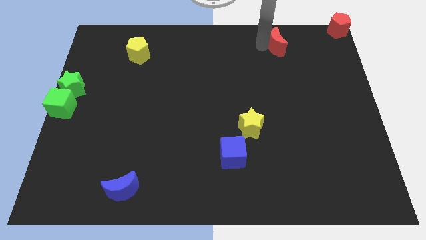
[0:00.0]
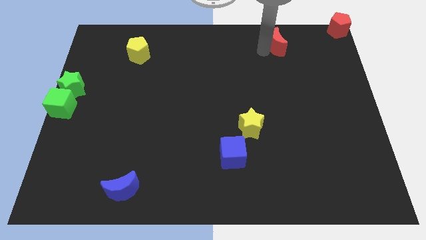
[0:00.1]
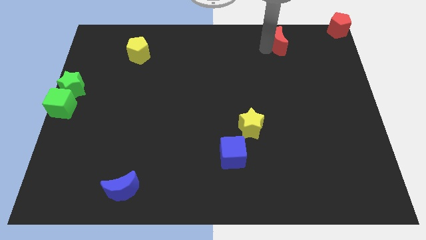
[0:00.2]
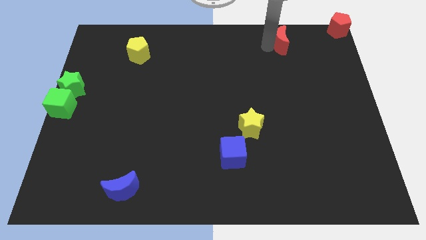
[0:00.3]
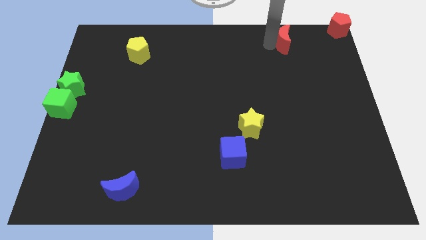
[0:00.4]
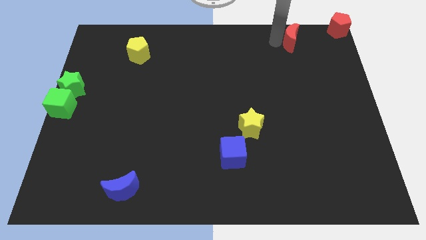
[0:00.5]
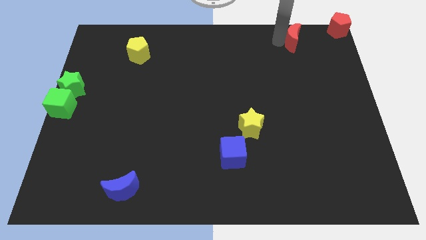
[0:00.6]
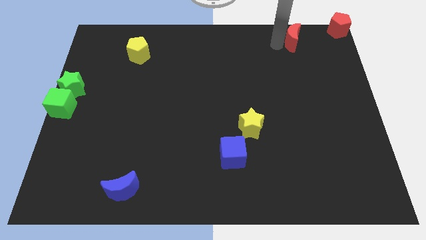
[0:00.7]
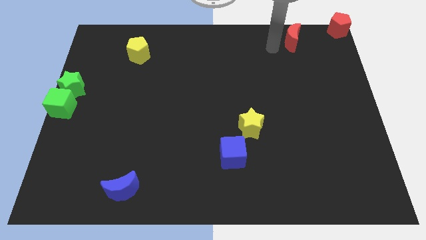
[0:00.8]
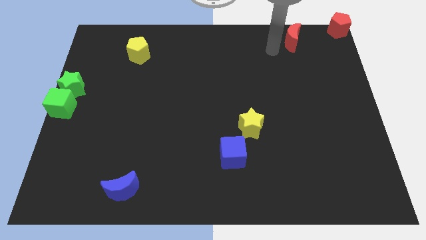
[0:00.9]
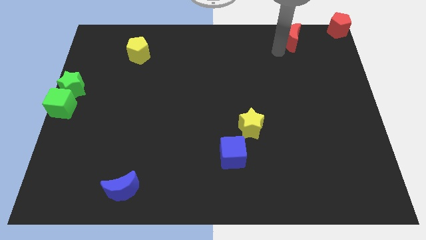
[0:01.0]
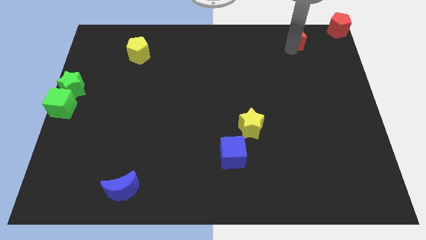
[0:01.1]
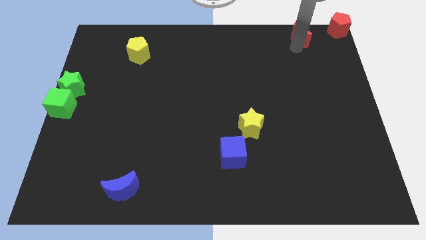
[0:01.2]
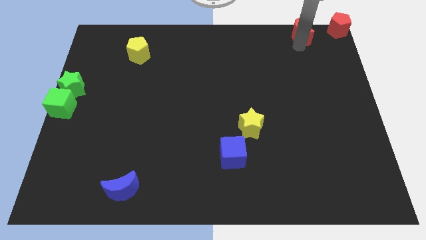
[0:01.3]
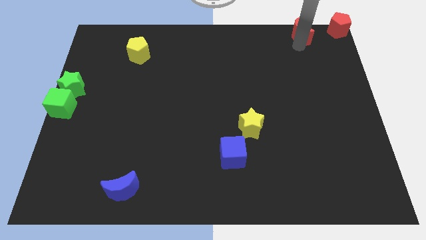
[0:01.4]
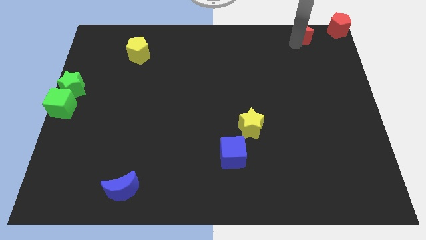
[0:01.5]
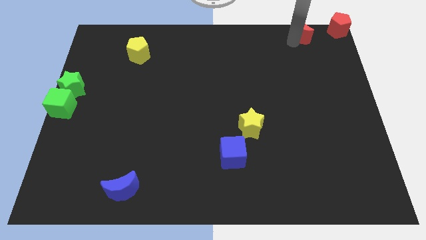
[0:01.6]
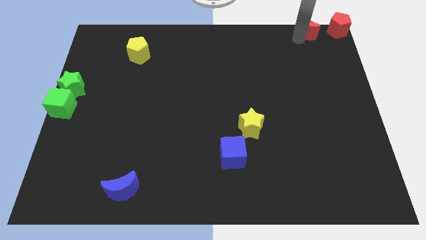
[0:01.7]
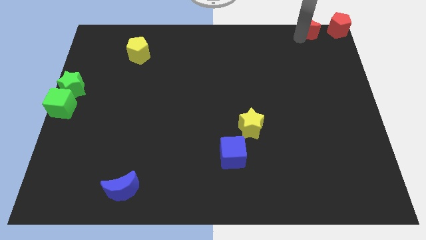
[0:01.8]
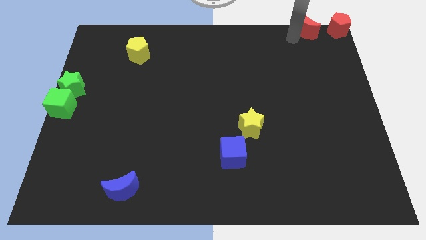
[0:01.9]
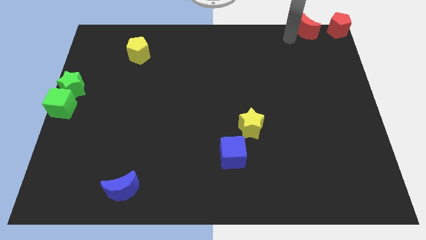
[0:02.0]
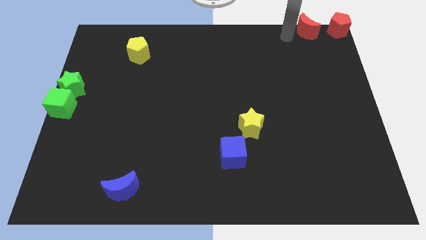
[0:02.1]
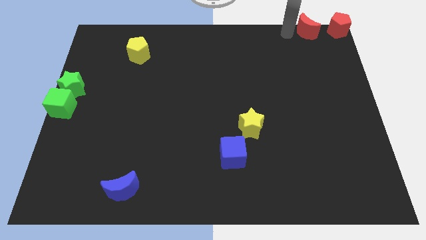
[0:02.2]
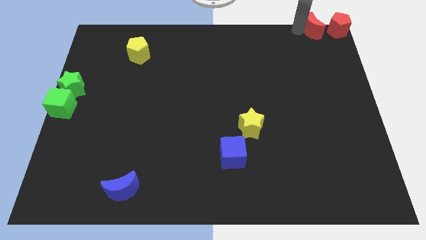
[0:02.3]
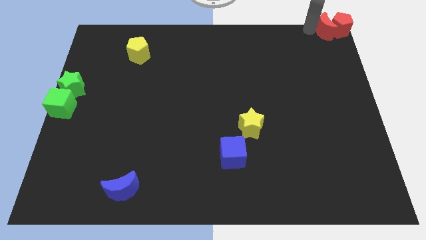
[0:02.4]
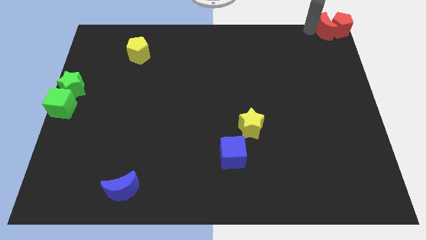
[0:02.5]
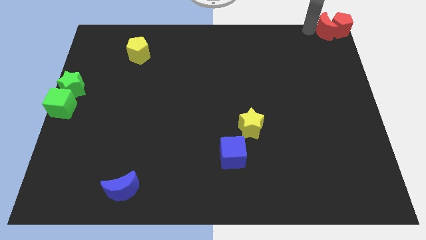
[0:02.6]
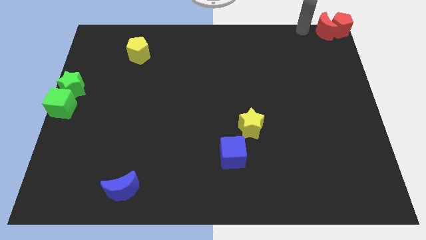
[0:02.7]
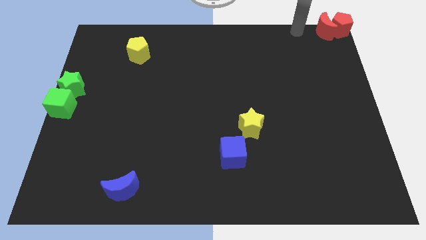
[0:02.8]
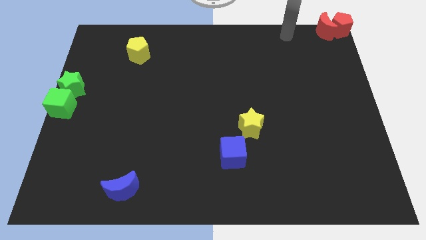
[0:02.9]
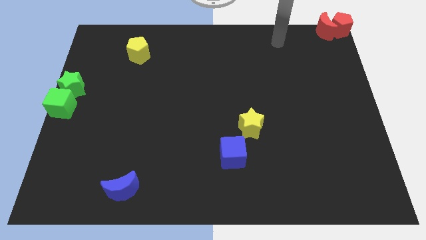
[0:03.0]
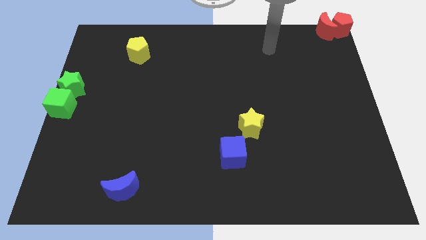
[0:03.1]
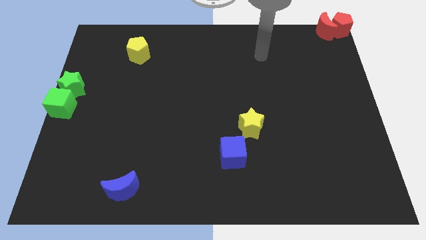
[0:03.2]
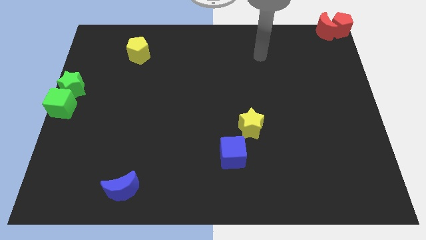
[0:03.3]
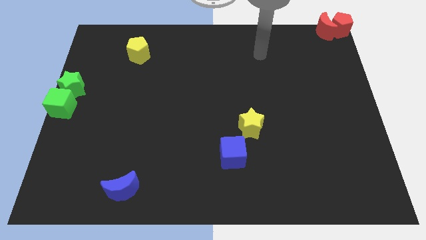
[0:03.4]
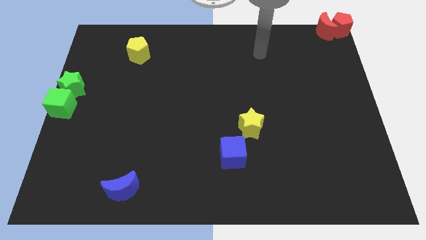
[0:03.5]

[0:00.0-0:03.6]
push the red crescent into red pentagon

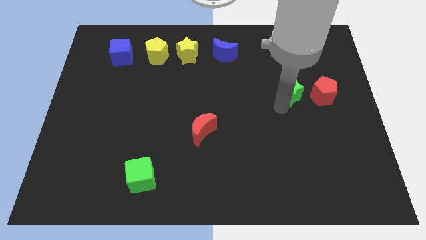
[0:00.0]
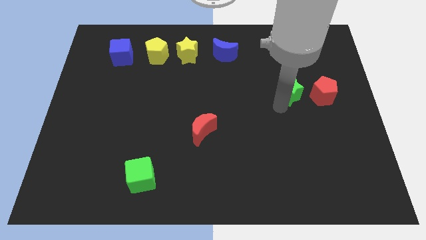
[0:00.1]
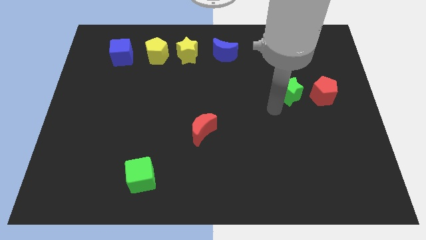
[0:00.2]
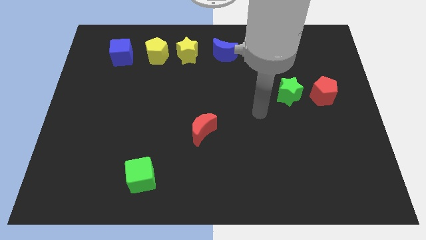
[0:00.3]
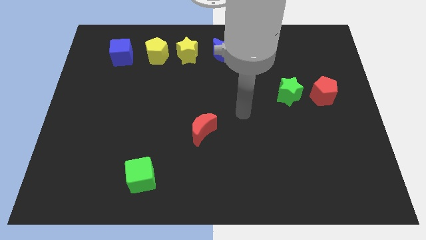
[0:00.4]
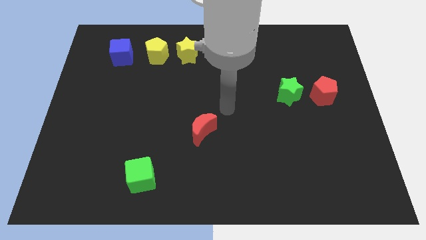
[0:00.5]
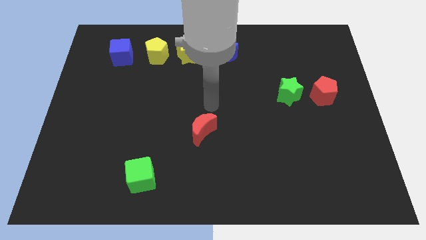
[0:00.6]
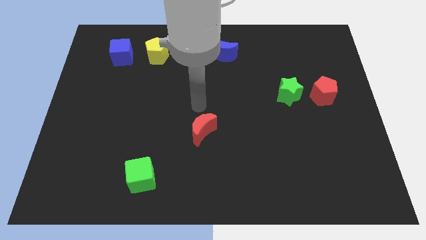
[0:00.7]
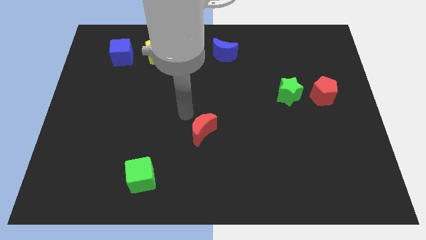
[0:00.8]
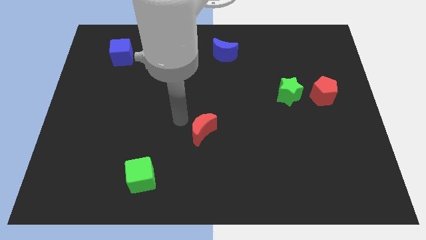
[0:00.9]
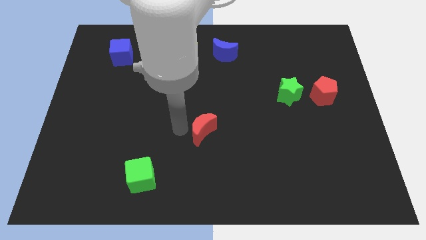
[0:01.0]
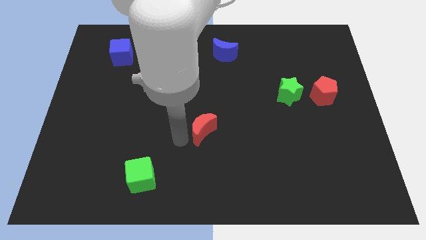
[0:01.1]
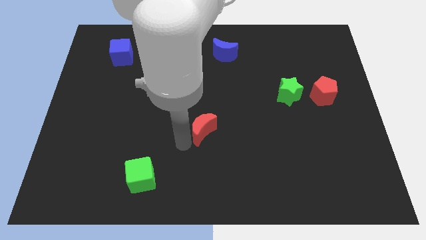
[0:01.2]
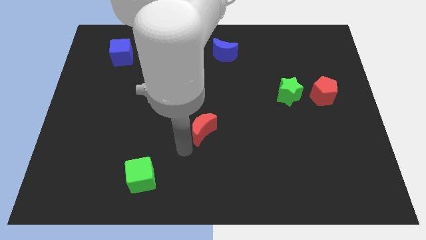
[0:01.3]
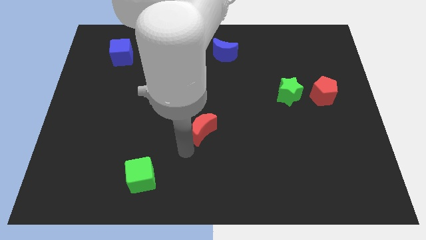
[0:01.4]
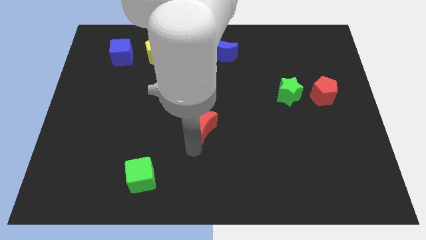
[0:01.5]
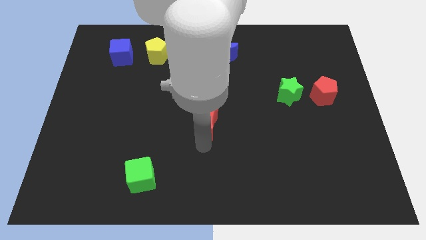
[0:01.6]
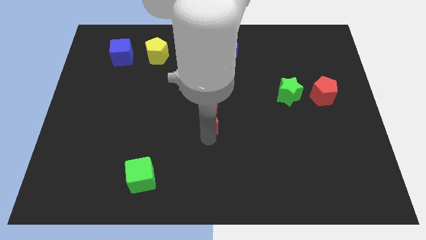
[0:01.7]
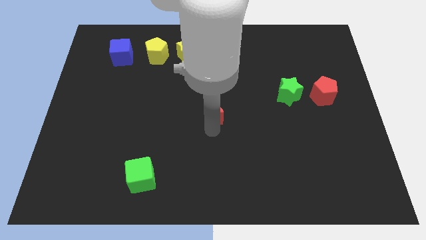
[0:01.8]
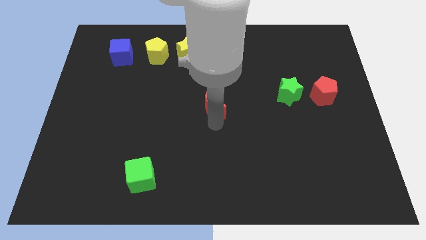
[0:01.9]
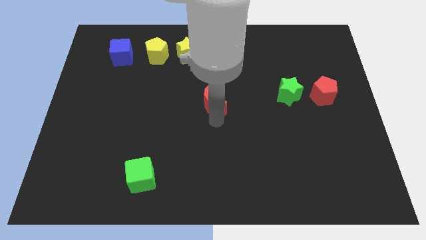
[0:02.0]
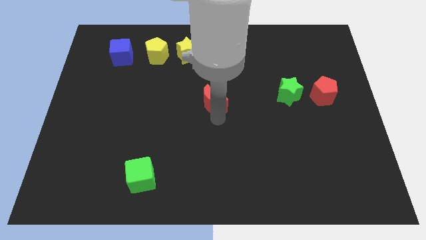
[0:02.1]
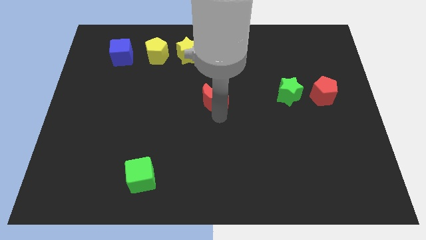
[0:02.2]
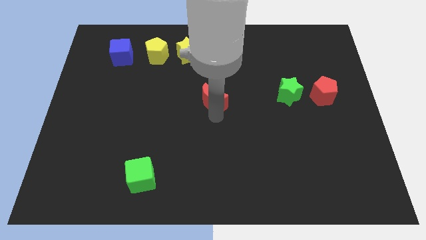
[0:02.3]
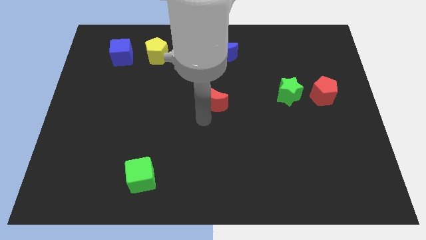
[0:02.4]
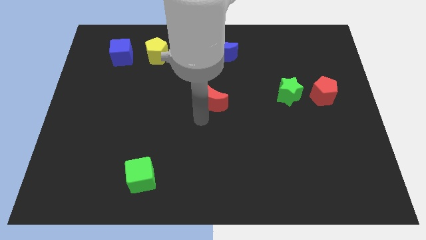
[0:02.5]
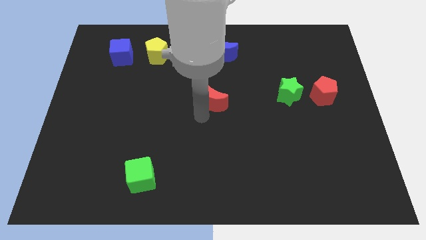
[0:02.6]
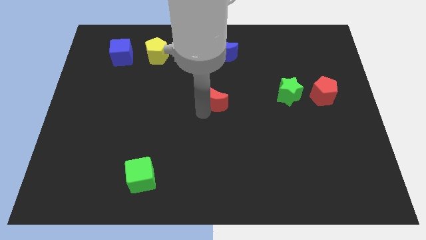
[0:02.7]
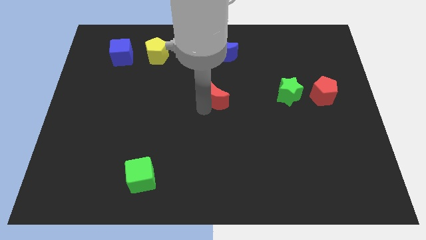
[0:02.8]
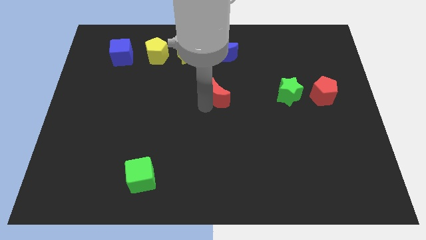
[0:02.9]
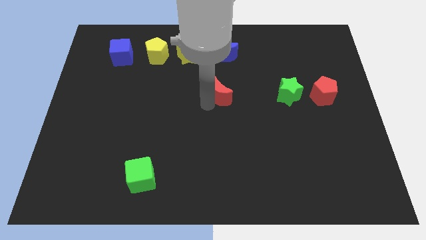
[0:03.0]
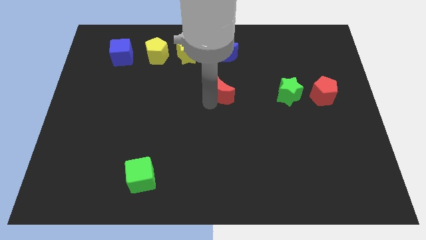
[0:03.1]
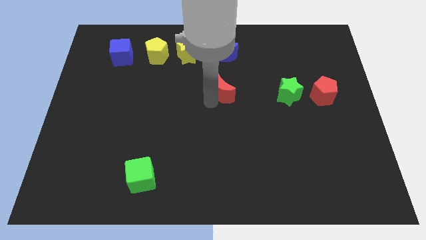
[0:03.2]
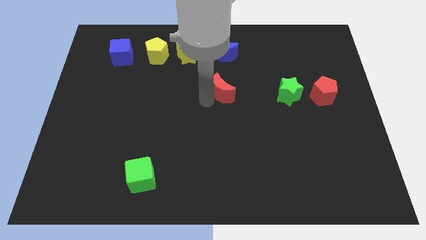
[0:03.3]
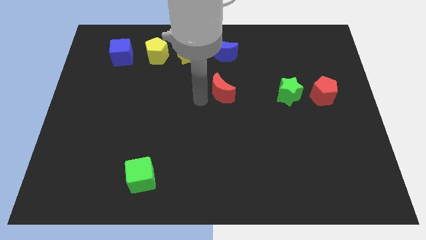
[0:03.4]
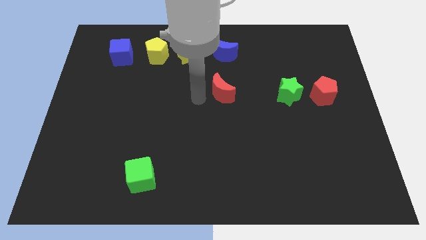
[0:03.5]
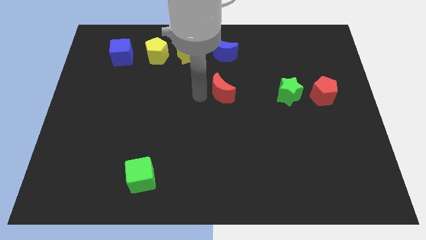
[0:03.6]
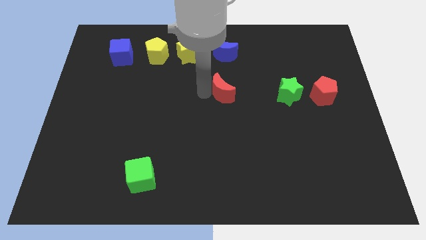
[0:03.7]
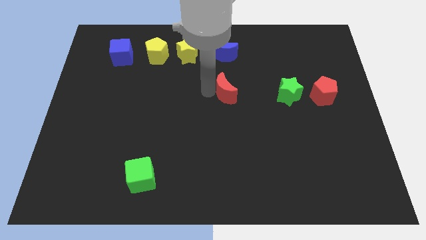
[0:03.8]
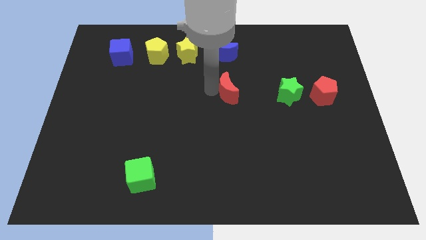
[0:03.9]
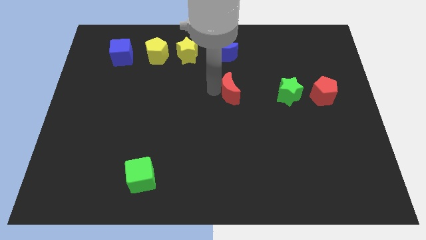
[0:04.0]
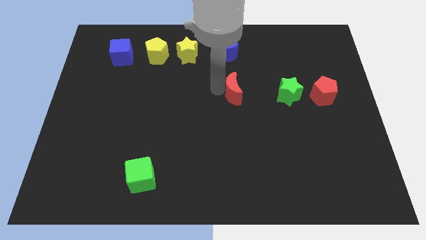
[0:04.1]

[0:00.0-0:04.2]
place the red moon at the bottom of blue moon

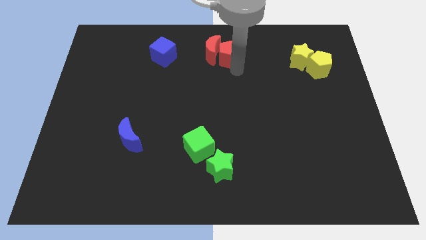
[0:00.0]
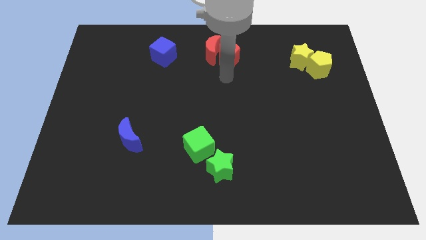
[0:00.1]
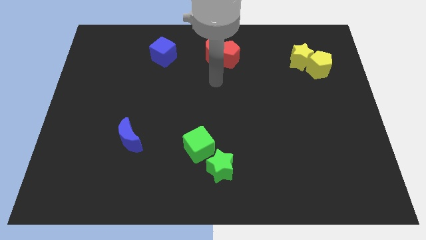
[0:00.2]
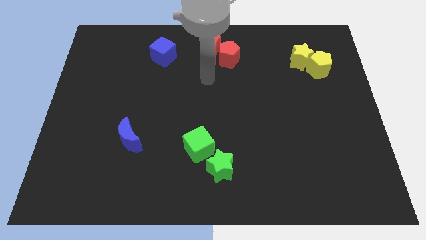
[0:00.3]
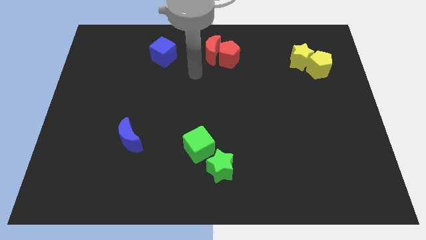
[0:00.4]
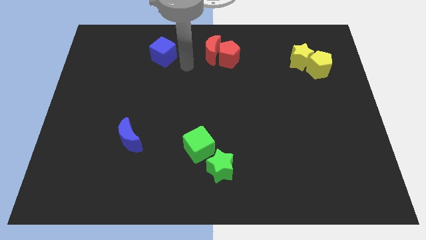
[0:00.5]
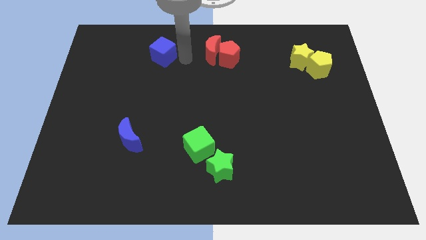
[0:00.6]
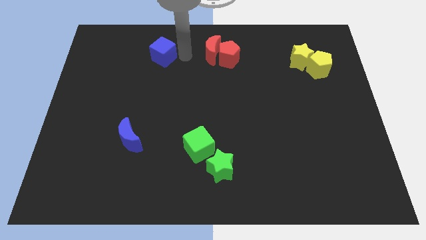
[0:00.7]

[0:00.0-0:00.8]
move away from the red pentagon

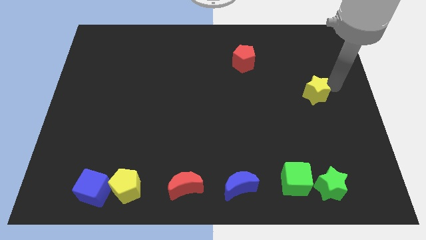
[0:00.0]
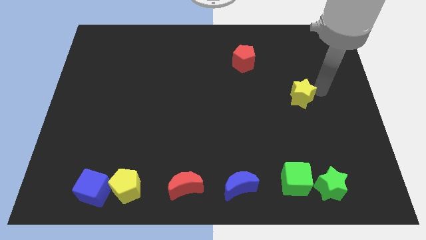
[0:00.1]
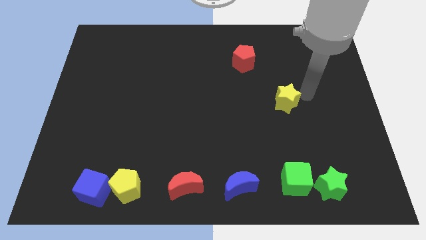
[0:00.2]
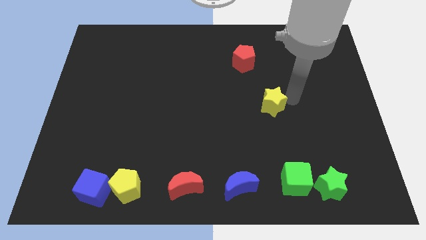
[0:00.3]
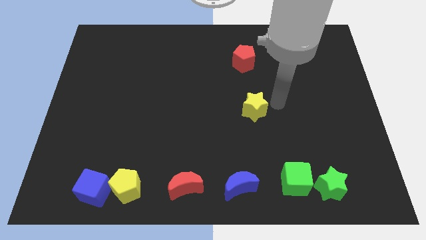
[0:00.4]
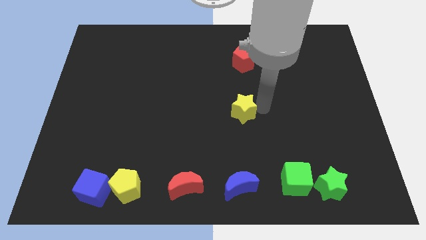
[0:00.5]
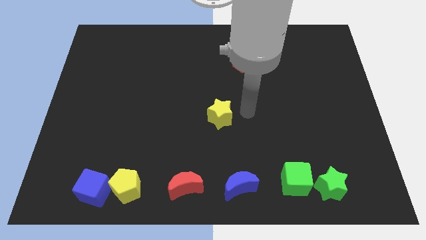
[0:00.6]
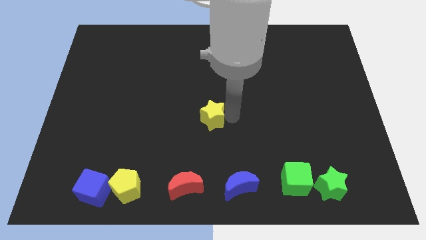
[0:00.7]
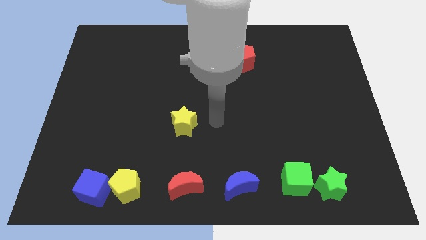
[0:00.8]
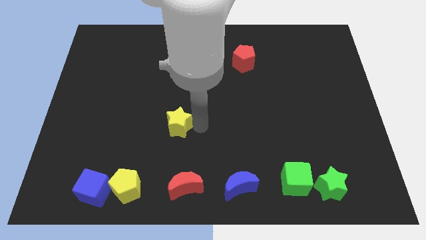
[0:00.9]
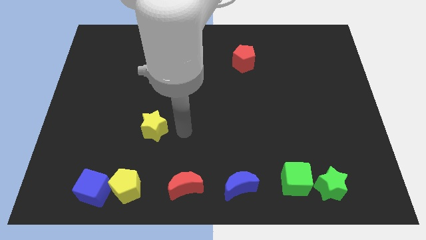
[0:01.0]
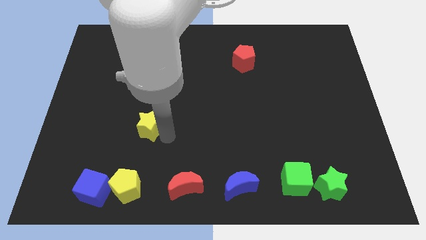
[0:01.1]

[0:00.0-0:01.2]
move the yellow star diagonally top left to the green cube
